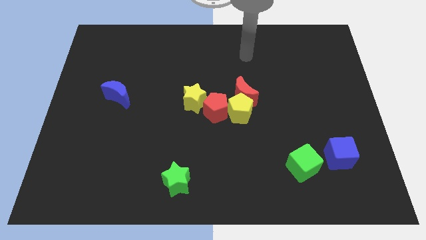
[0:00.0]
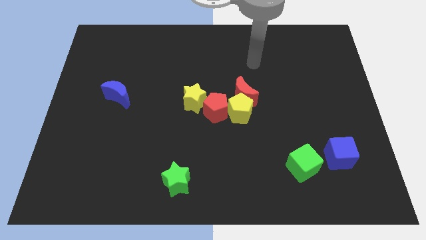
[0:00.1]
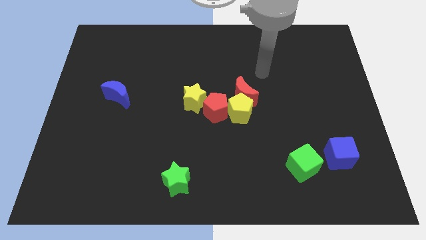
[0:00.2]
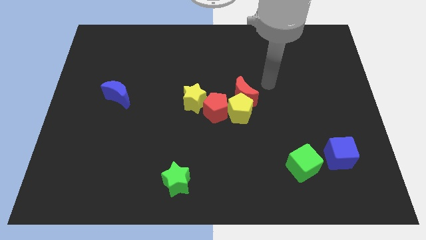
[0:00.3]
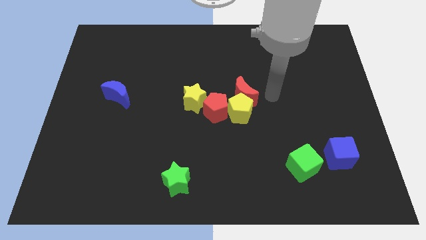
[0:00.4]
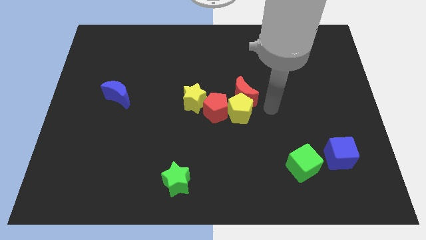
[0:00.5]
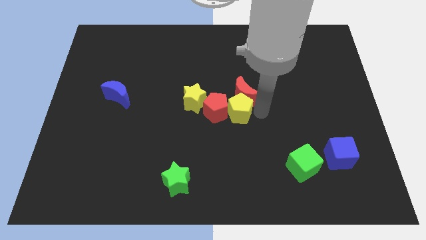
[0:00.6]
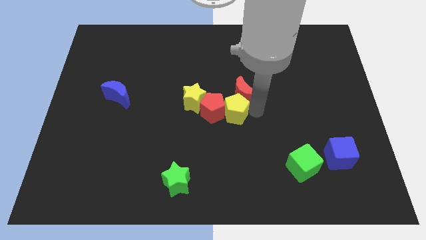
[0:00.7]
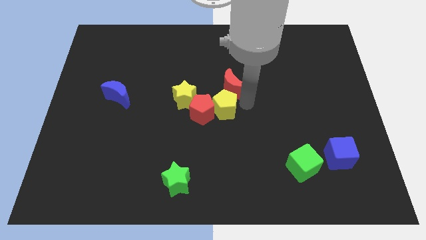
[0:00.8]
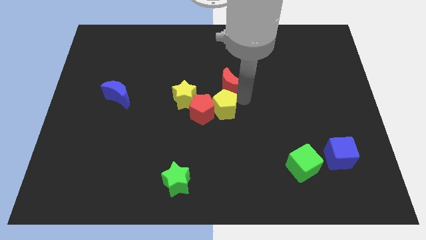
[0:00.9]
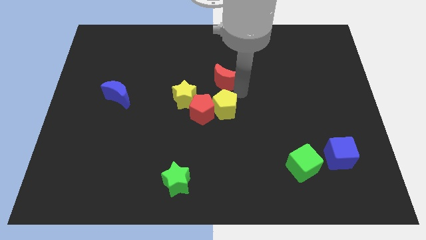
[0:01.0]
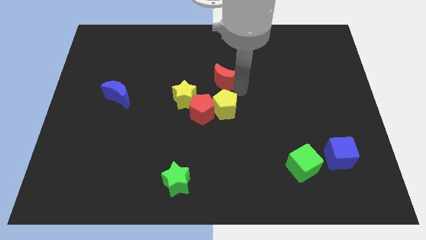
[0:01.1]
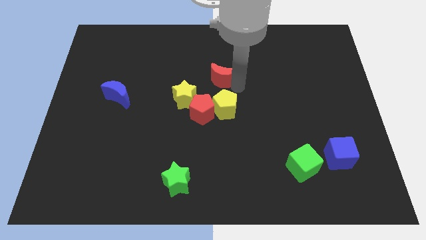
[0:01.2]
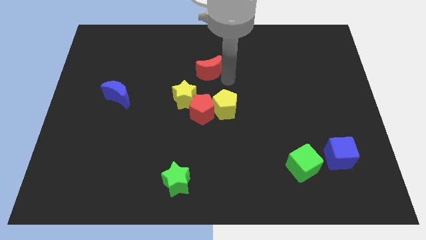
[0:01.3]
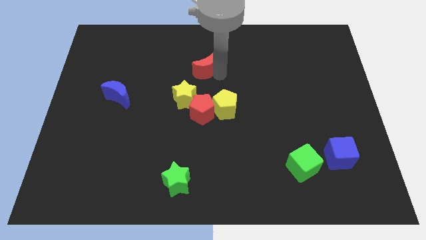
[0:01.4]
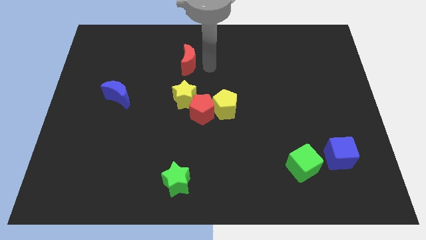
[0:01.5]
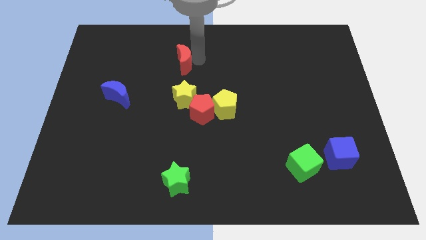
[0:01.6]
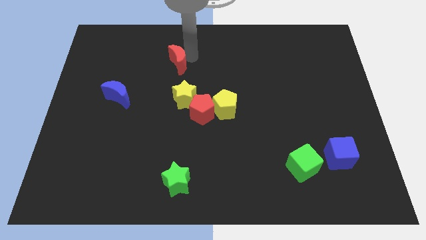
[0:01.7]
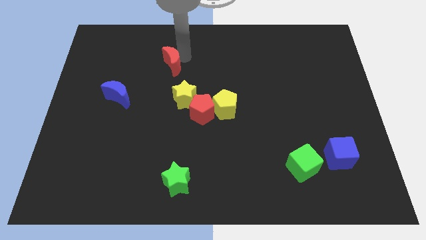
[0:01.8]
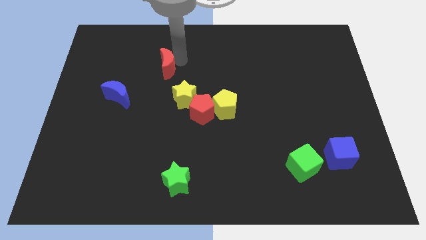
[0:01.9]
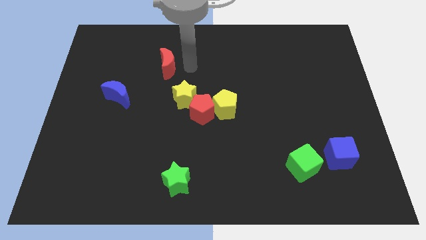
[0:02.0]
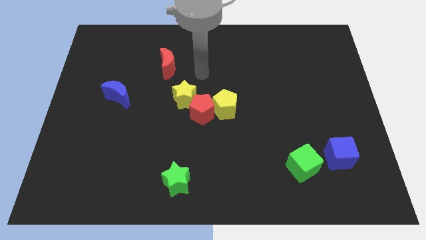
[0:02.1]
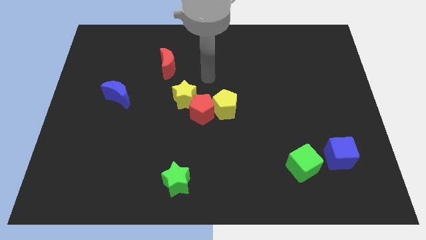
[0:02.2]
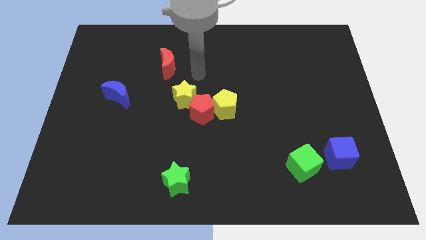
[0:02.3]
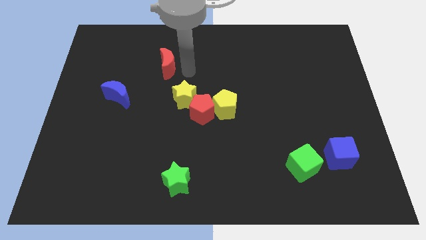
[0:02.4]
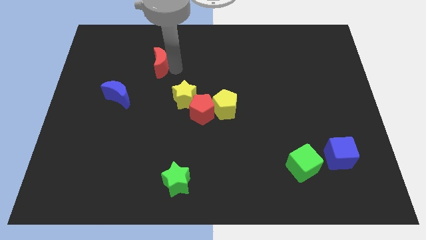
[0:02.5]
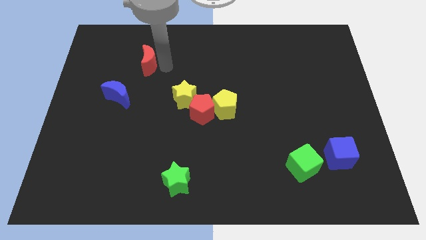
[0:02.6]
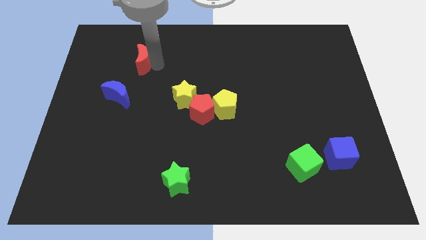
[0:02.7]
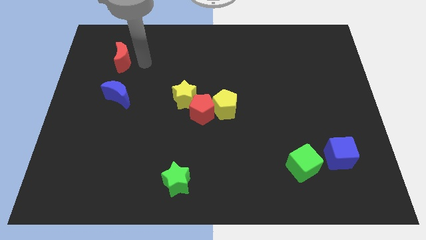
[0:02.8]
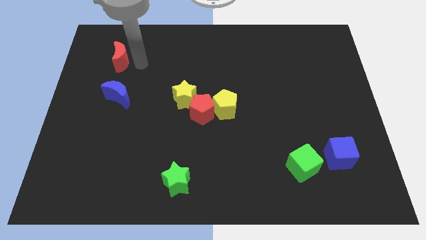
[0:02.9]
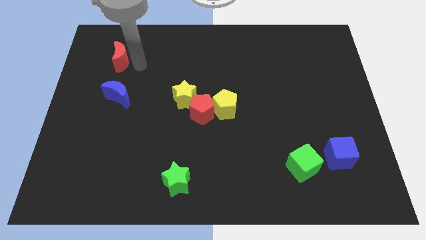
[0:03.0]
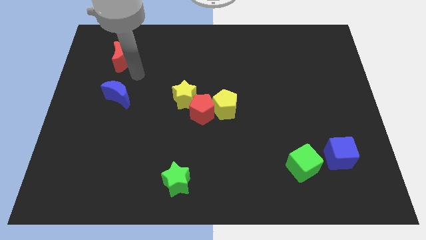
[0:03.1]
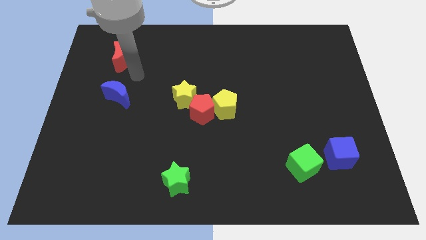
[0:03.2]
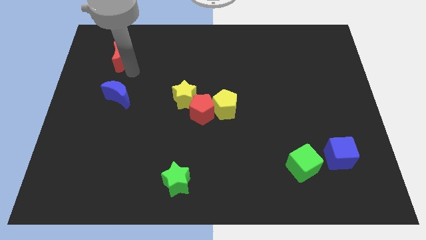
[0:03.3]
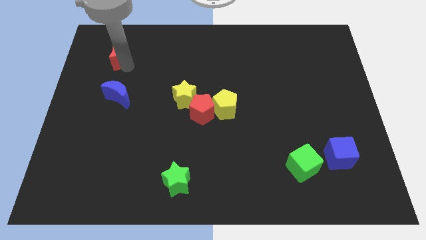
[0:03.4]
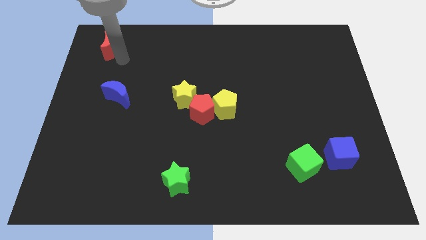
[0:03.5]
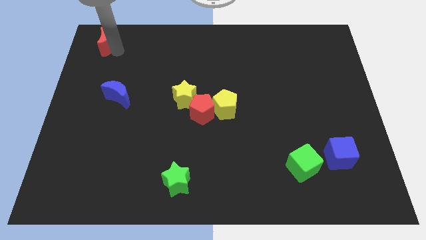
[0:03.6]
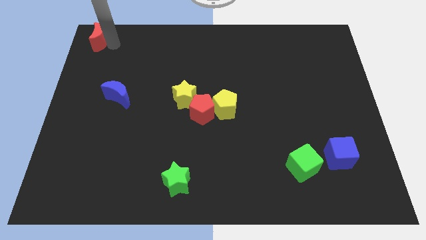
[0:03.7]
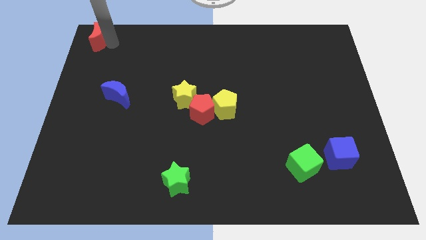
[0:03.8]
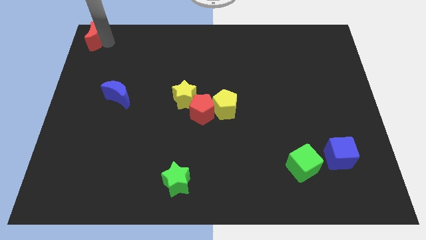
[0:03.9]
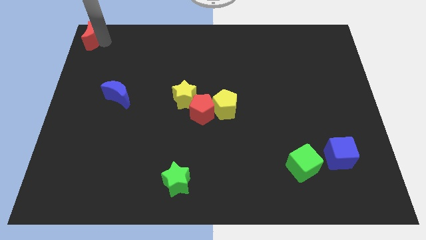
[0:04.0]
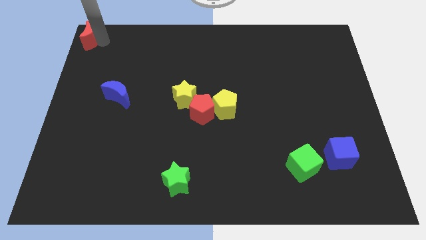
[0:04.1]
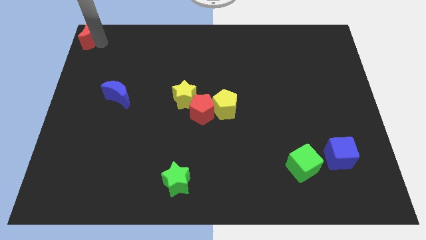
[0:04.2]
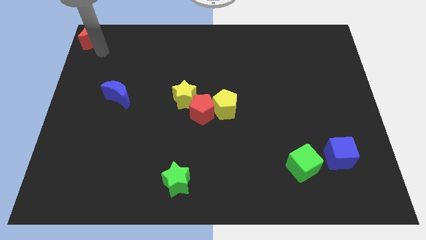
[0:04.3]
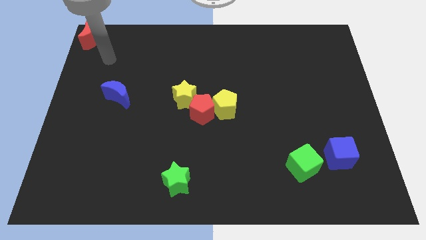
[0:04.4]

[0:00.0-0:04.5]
place the red crescent at the top left corner of the board

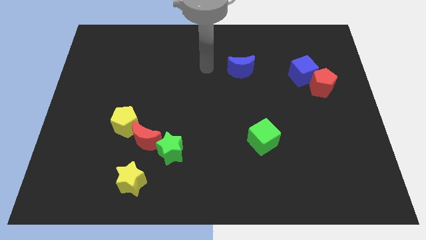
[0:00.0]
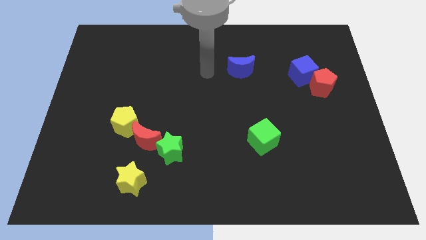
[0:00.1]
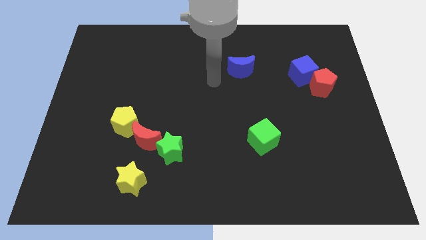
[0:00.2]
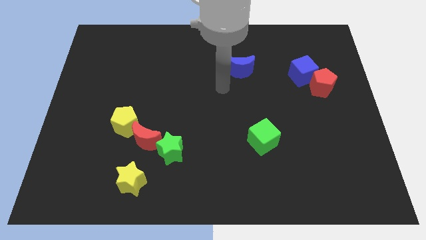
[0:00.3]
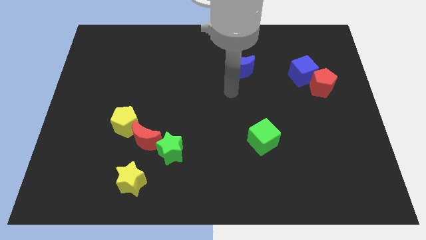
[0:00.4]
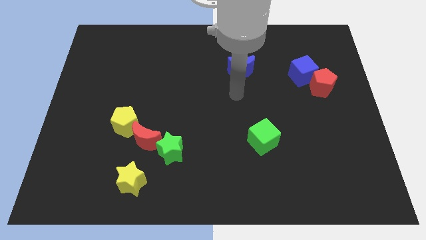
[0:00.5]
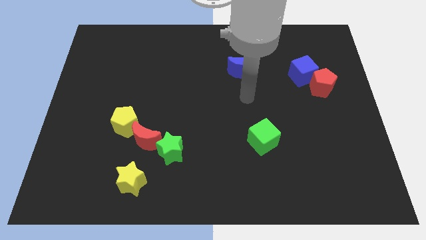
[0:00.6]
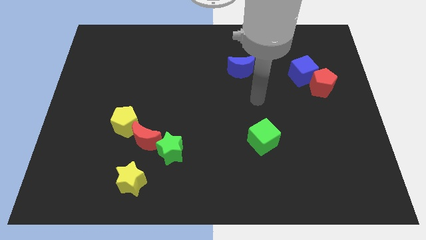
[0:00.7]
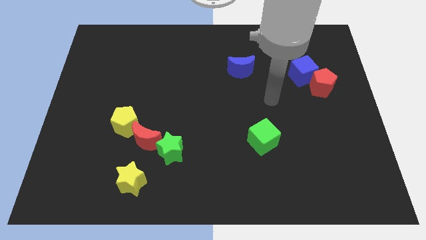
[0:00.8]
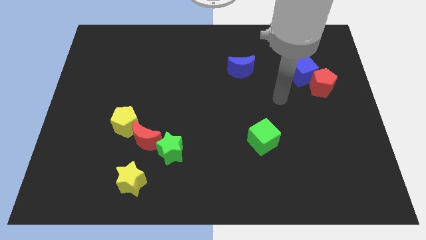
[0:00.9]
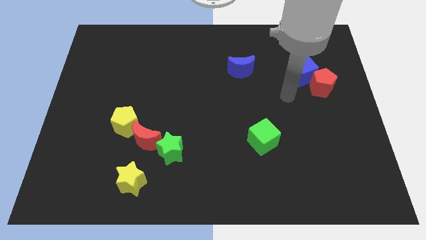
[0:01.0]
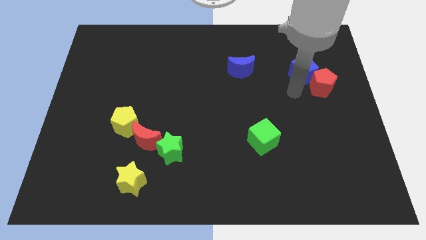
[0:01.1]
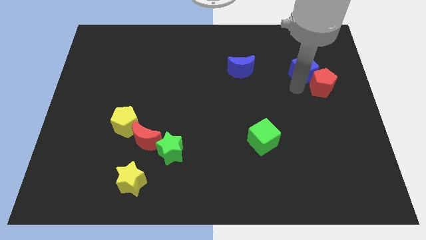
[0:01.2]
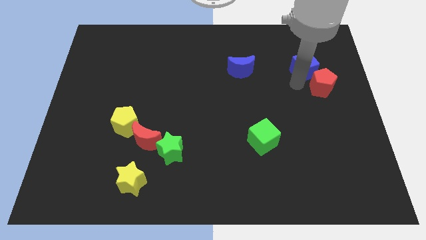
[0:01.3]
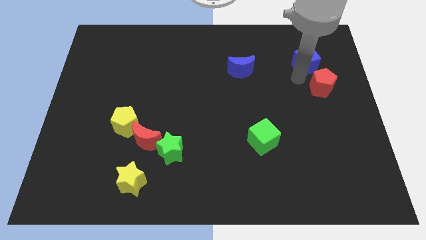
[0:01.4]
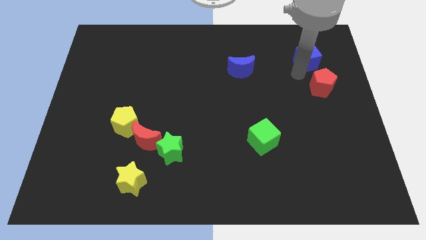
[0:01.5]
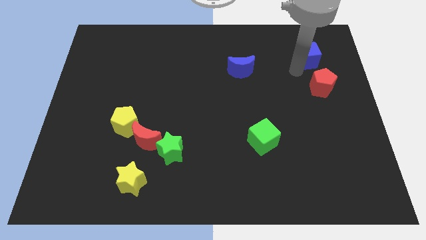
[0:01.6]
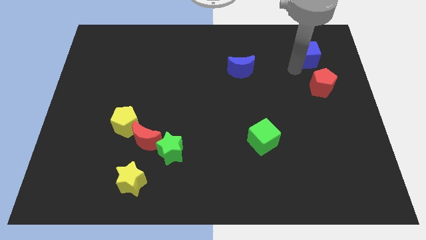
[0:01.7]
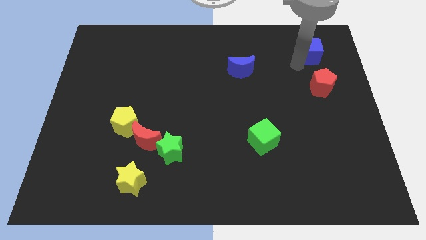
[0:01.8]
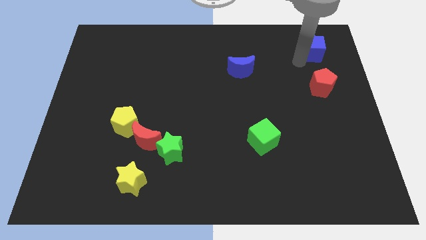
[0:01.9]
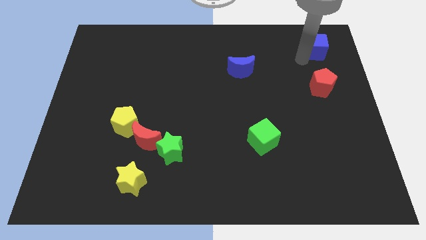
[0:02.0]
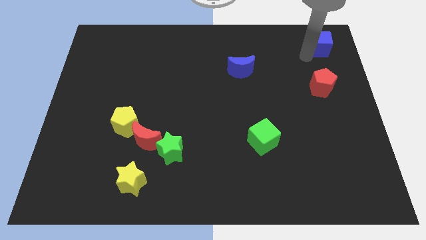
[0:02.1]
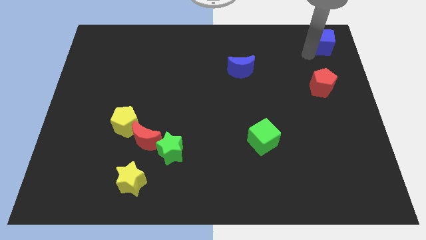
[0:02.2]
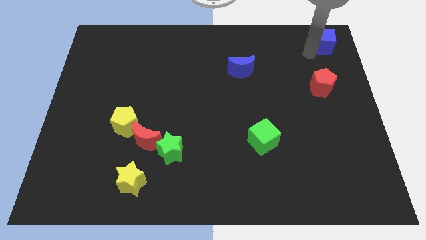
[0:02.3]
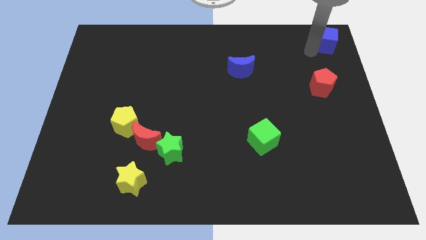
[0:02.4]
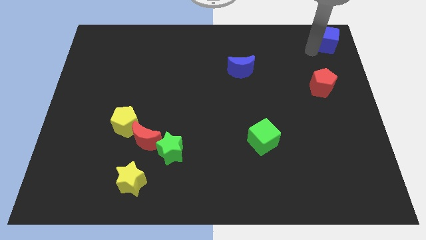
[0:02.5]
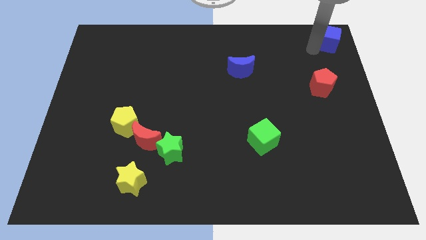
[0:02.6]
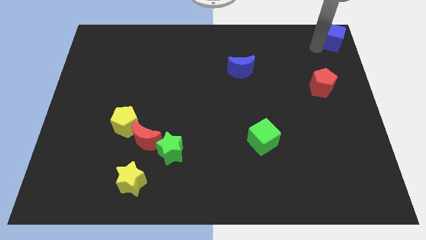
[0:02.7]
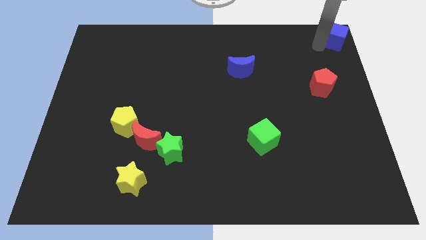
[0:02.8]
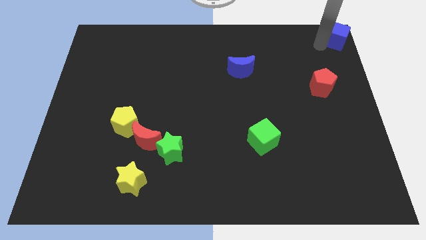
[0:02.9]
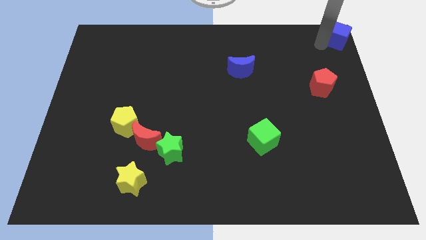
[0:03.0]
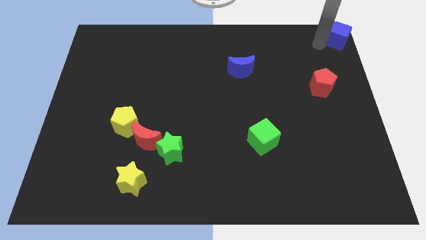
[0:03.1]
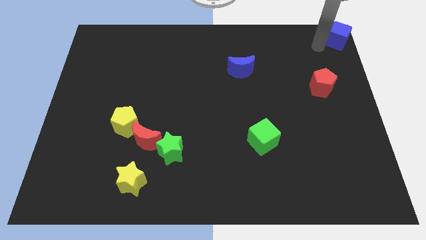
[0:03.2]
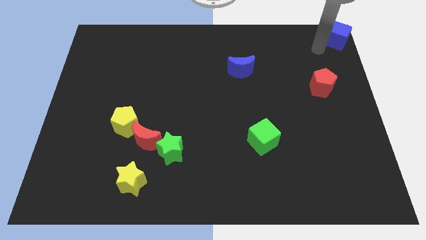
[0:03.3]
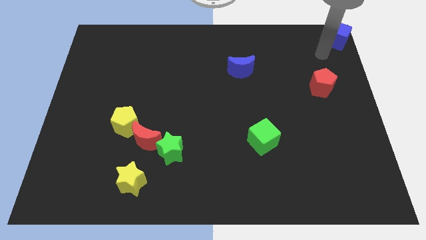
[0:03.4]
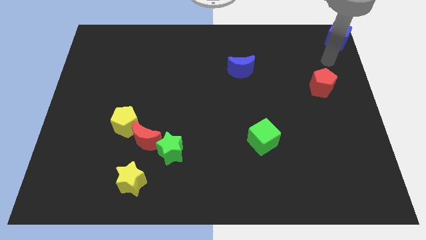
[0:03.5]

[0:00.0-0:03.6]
push blue cube towards top right corner of the board

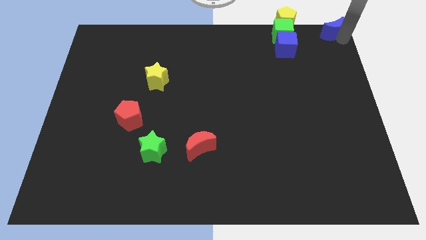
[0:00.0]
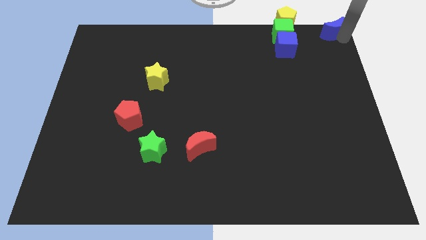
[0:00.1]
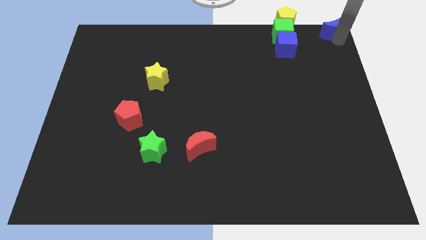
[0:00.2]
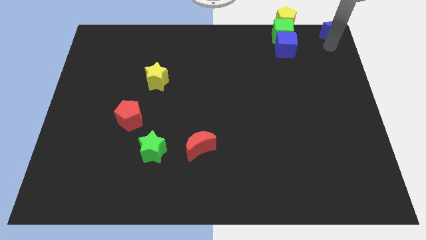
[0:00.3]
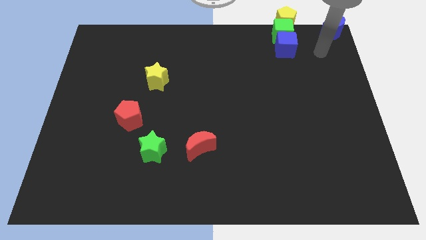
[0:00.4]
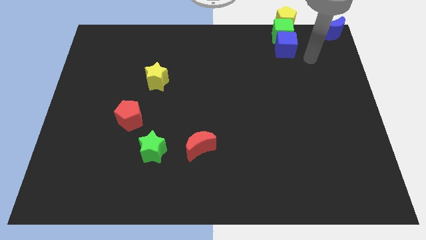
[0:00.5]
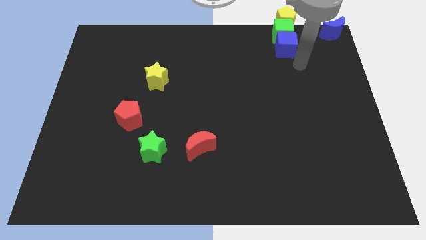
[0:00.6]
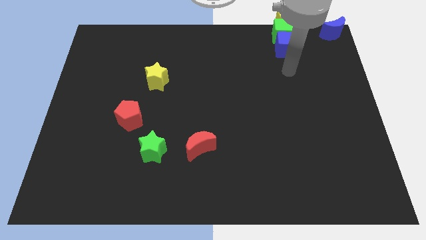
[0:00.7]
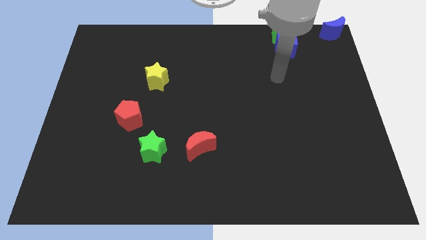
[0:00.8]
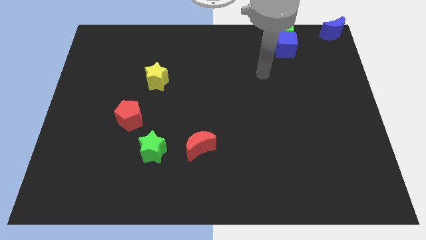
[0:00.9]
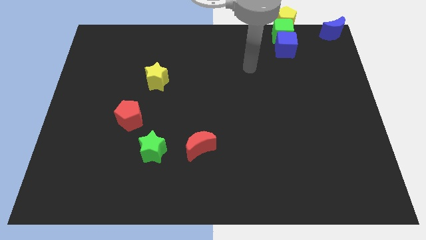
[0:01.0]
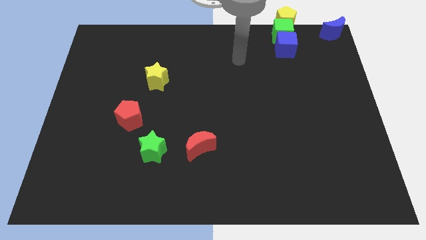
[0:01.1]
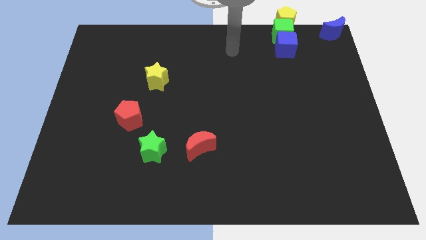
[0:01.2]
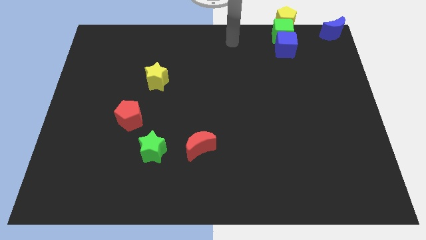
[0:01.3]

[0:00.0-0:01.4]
move your arm away from the blue moon
